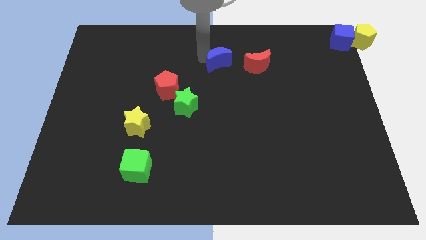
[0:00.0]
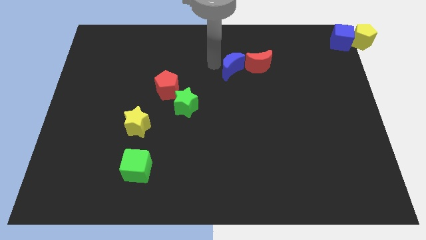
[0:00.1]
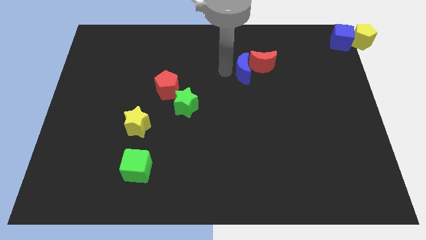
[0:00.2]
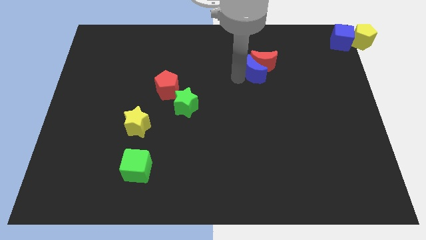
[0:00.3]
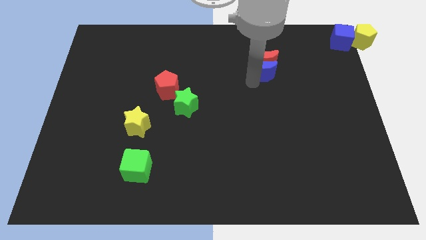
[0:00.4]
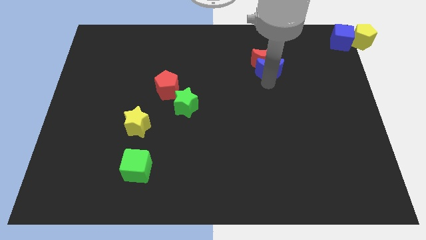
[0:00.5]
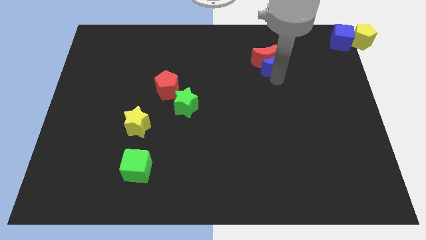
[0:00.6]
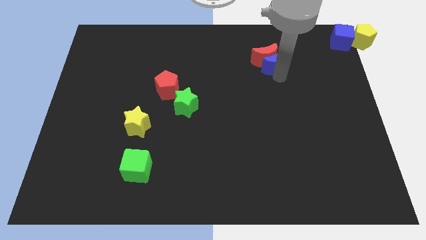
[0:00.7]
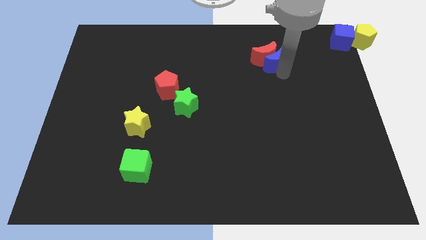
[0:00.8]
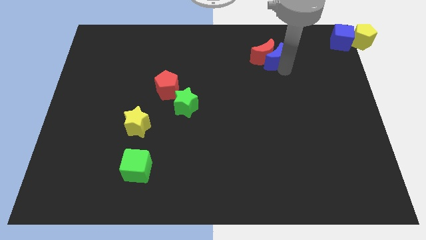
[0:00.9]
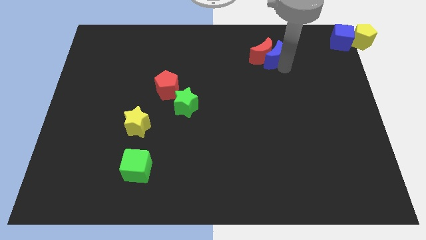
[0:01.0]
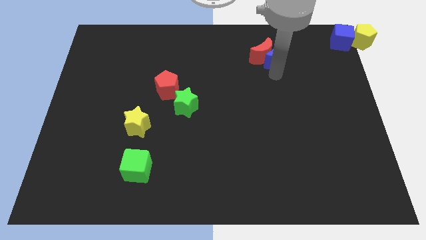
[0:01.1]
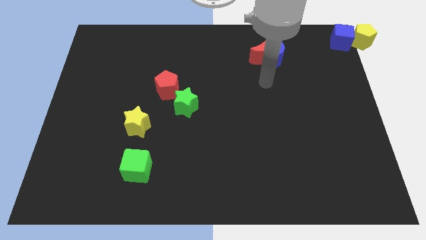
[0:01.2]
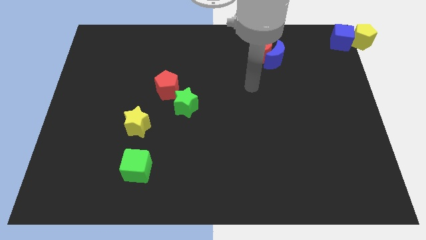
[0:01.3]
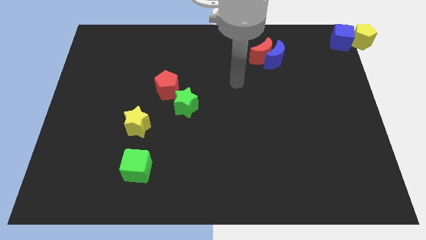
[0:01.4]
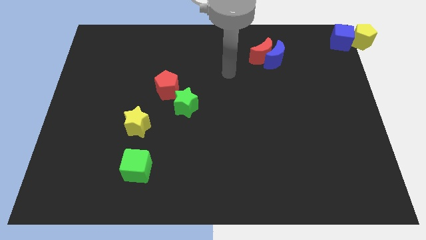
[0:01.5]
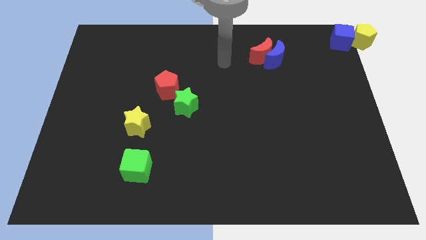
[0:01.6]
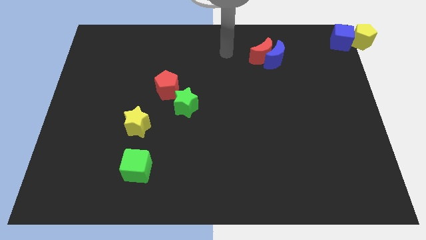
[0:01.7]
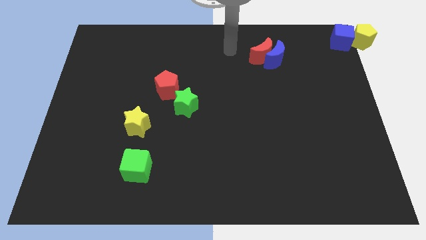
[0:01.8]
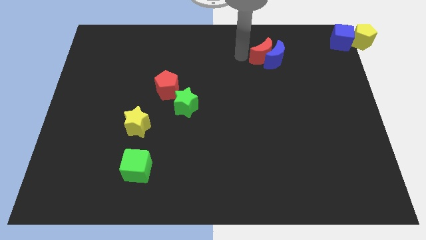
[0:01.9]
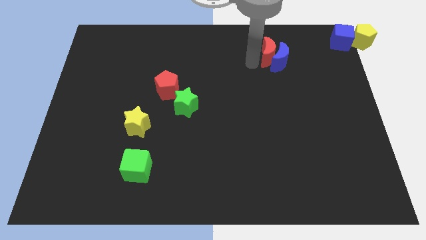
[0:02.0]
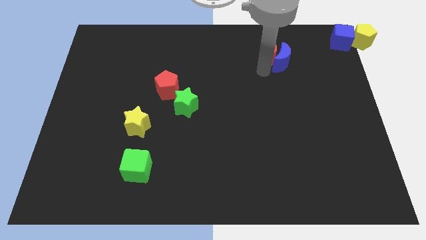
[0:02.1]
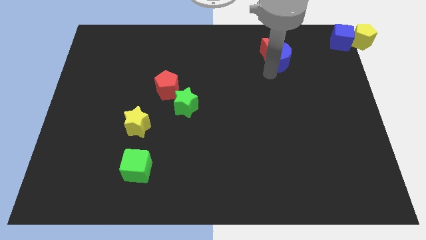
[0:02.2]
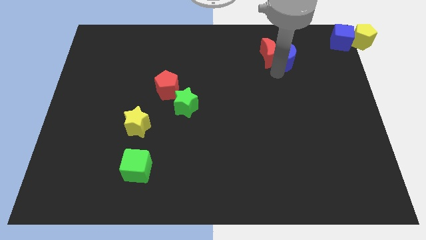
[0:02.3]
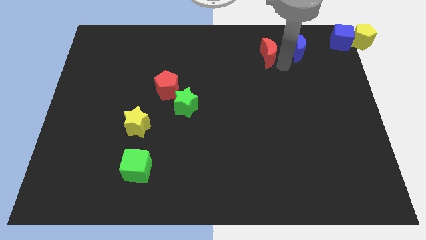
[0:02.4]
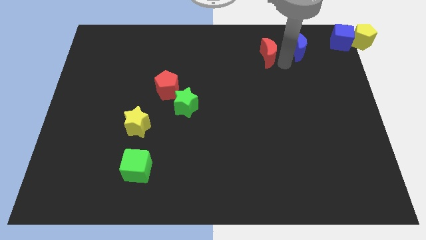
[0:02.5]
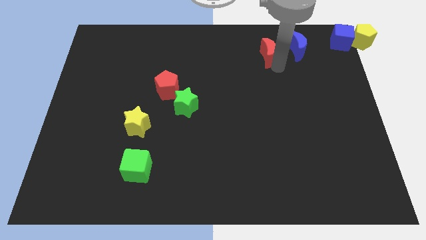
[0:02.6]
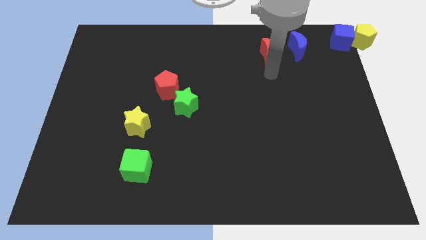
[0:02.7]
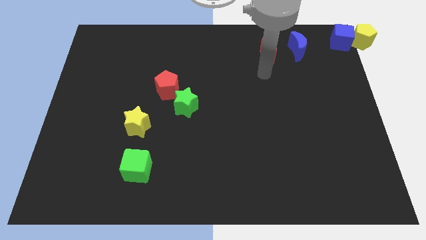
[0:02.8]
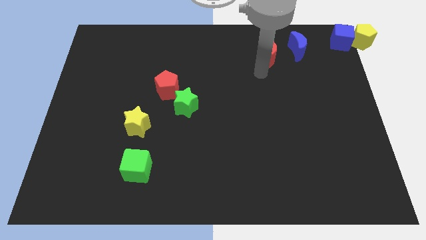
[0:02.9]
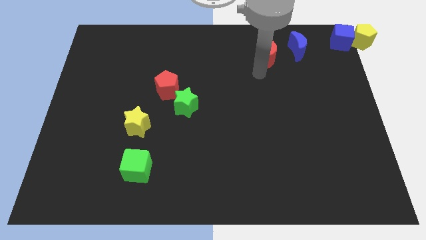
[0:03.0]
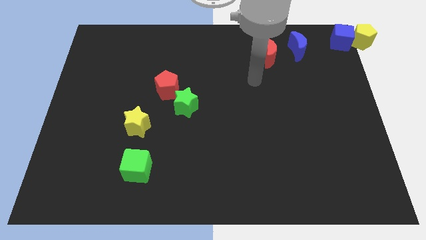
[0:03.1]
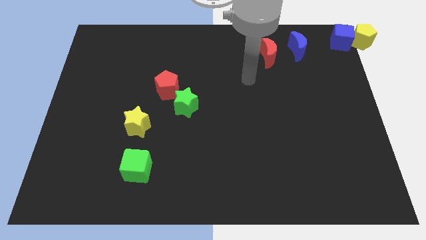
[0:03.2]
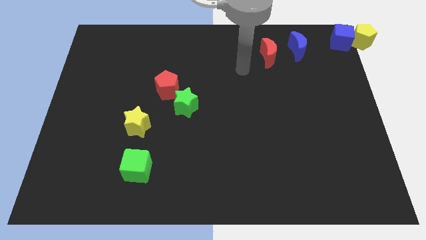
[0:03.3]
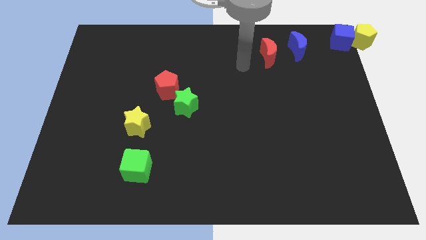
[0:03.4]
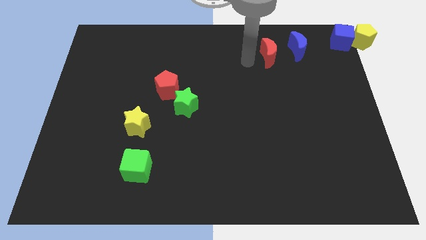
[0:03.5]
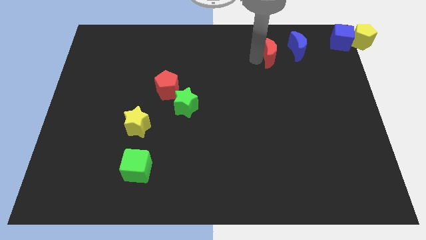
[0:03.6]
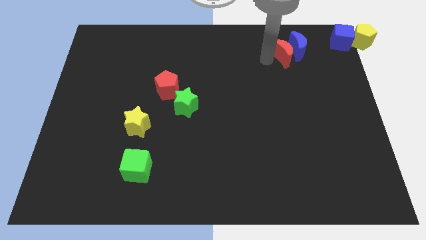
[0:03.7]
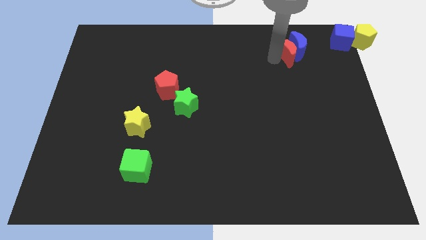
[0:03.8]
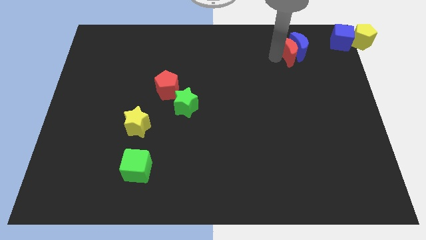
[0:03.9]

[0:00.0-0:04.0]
move the red crescent into the blue crescent

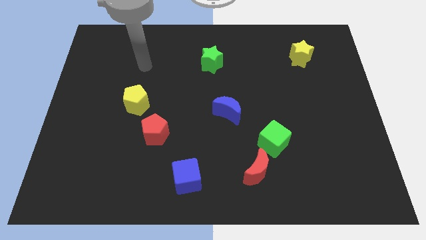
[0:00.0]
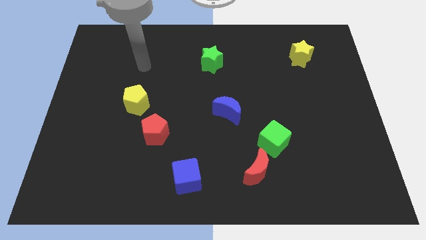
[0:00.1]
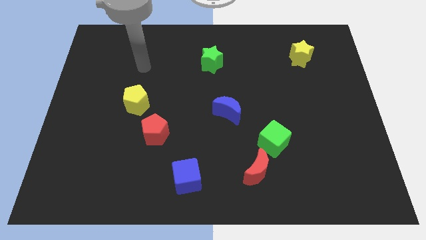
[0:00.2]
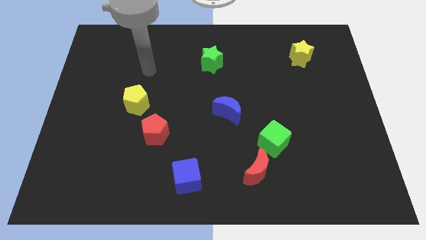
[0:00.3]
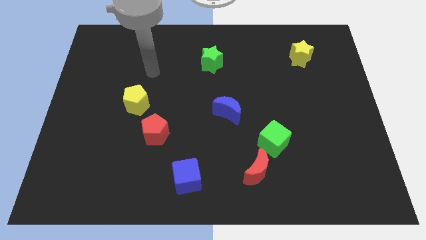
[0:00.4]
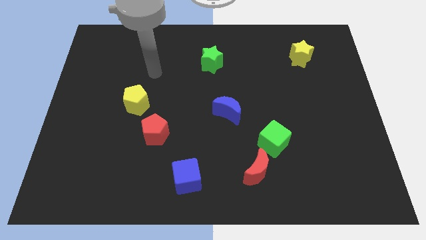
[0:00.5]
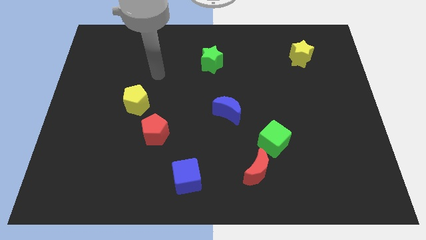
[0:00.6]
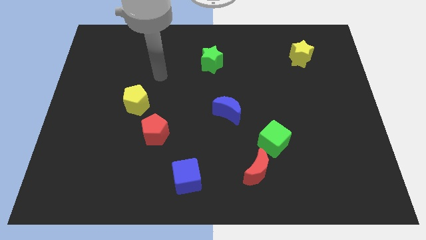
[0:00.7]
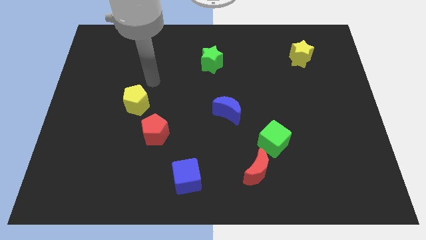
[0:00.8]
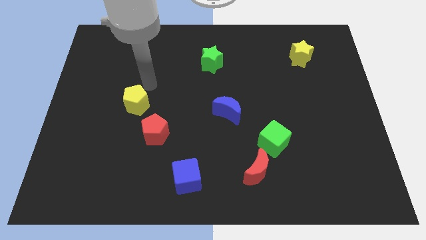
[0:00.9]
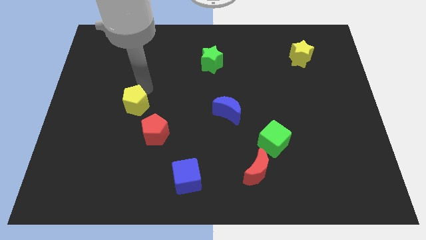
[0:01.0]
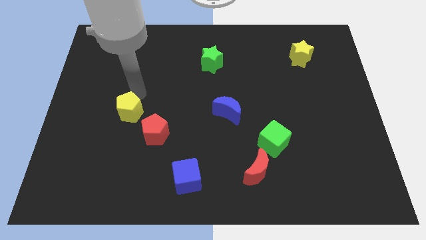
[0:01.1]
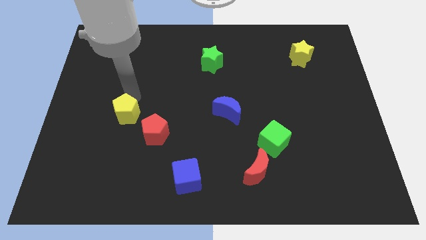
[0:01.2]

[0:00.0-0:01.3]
touch the top of the yellow pentagon

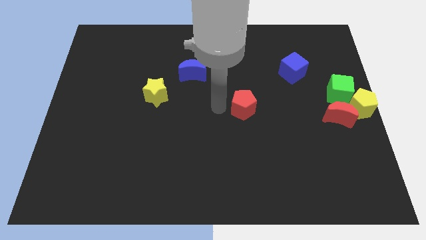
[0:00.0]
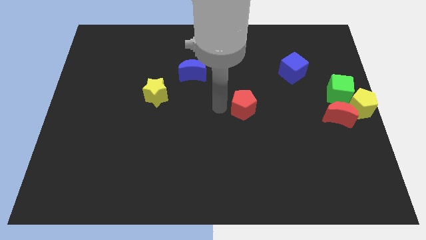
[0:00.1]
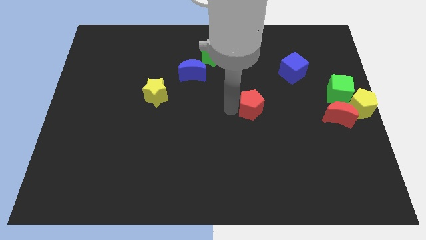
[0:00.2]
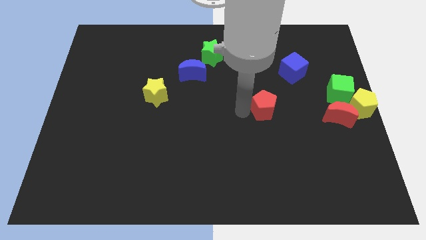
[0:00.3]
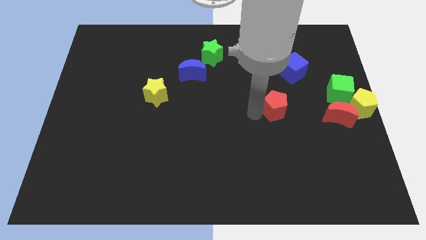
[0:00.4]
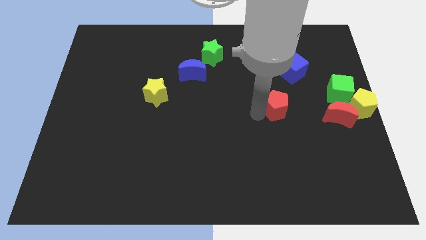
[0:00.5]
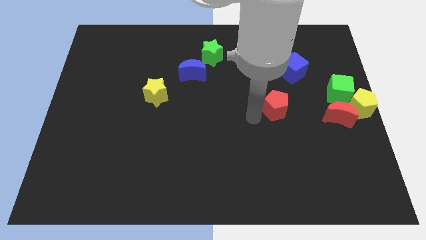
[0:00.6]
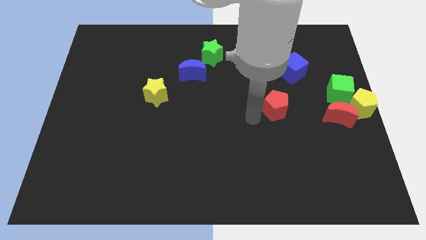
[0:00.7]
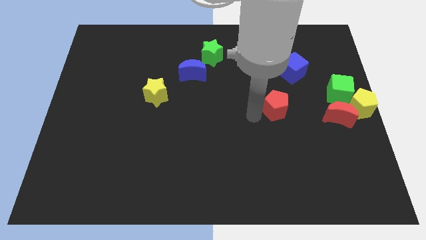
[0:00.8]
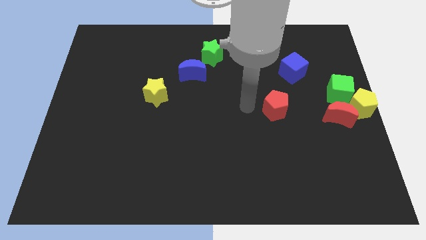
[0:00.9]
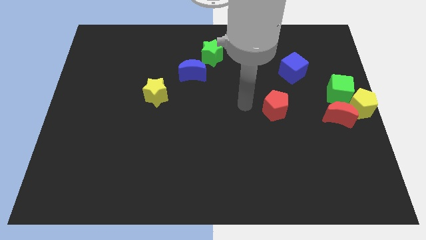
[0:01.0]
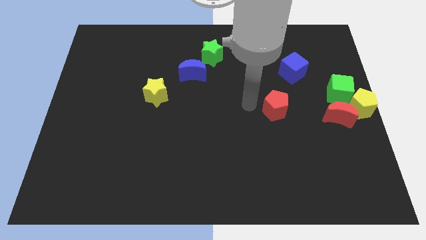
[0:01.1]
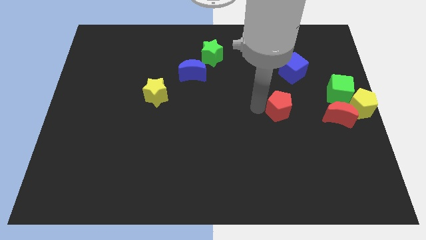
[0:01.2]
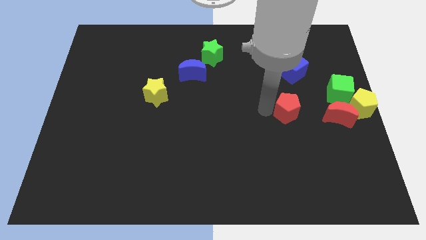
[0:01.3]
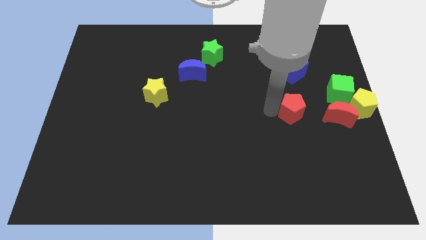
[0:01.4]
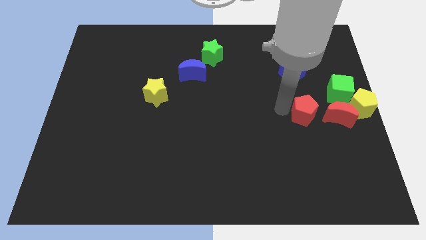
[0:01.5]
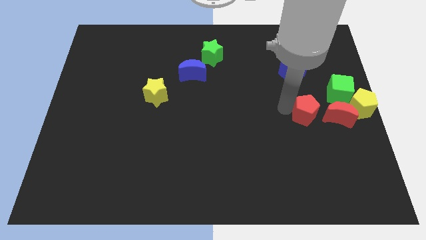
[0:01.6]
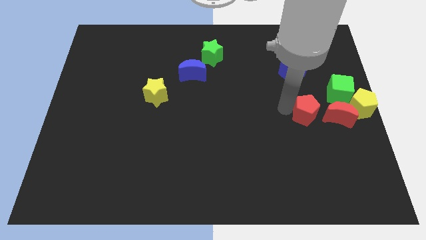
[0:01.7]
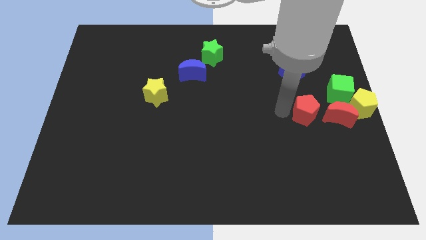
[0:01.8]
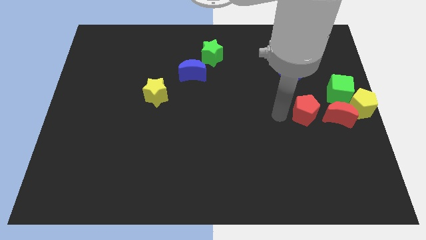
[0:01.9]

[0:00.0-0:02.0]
place the red pentagon towards the red crescent

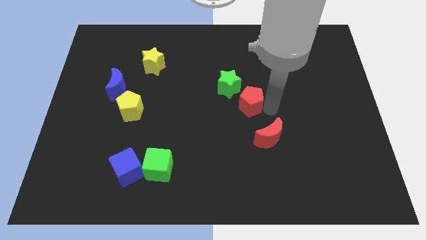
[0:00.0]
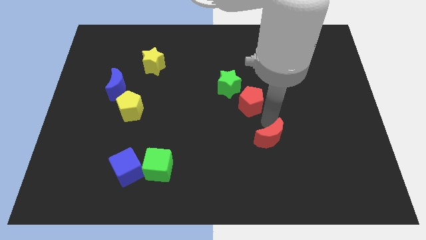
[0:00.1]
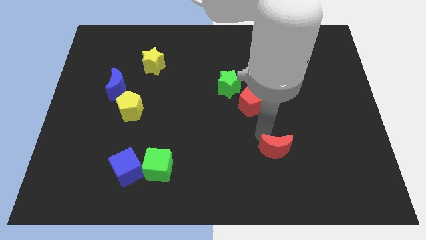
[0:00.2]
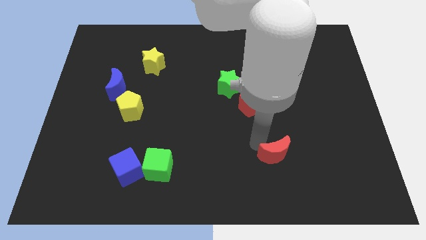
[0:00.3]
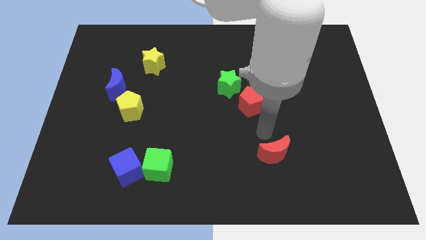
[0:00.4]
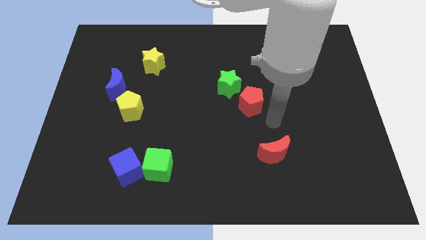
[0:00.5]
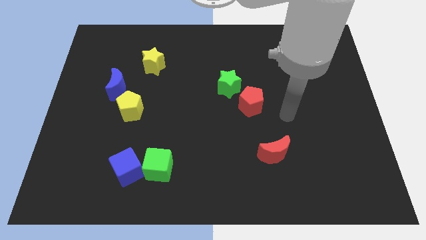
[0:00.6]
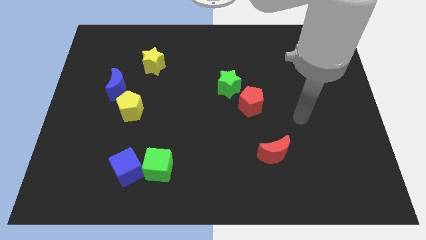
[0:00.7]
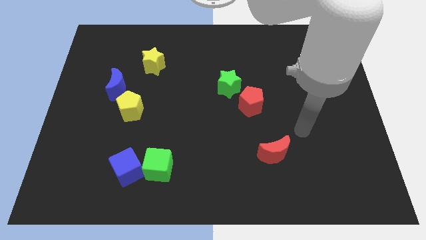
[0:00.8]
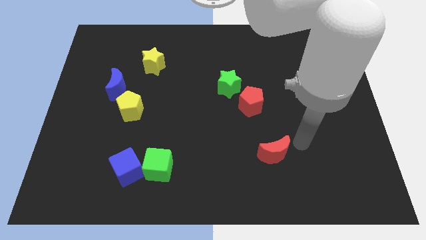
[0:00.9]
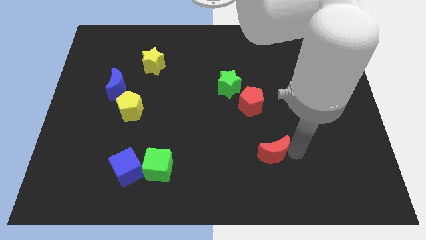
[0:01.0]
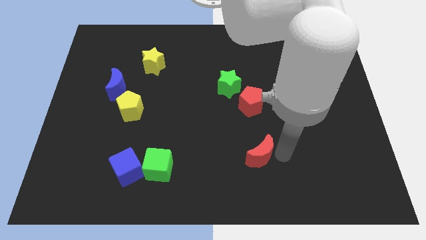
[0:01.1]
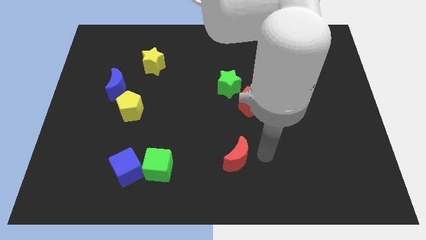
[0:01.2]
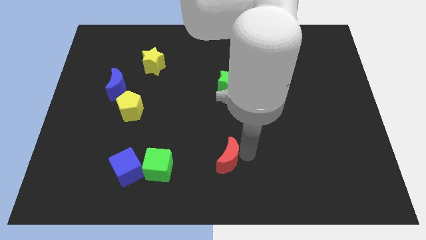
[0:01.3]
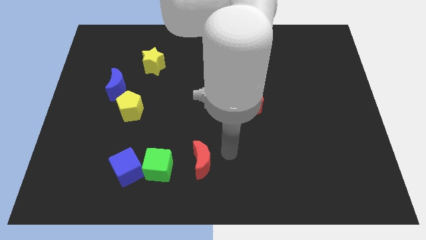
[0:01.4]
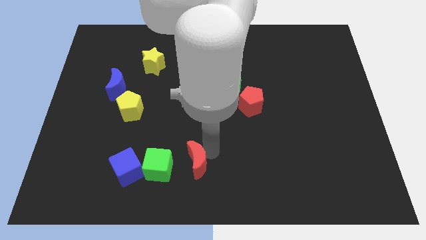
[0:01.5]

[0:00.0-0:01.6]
push the red moon diagonally bottom left to the red pentagon
